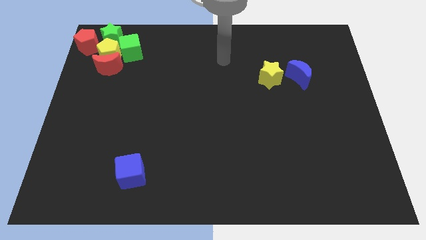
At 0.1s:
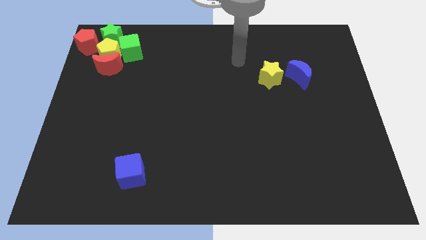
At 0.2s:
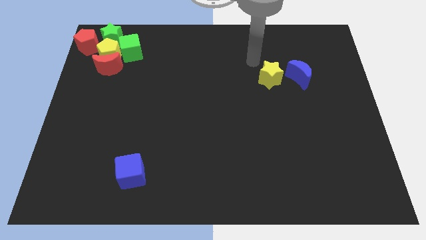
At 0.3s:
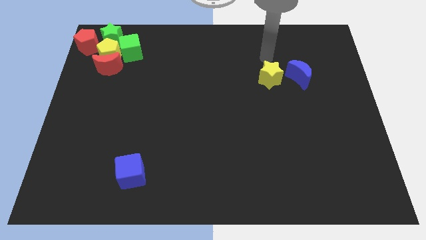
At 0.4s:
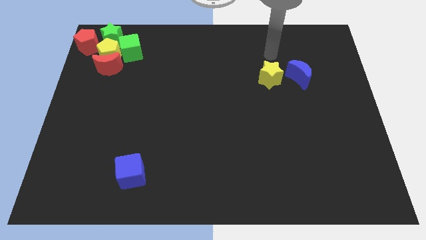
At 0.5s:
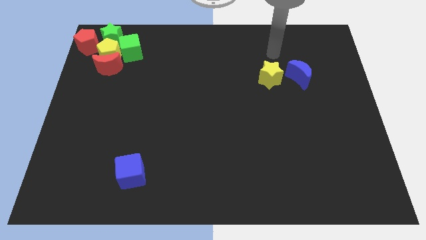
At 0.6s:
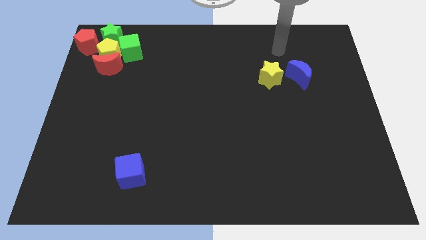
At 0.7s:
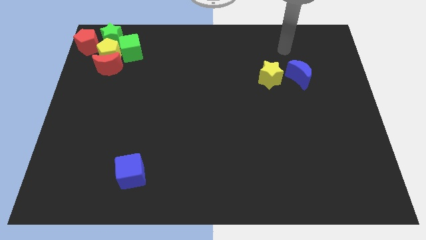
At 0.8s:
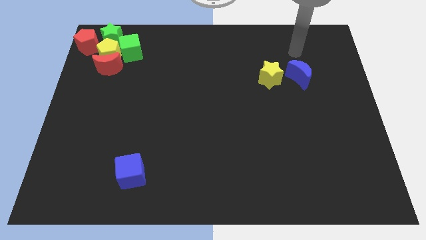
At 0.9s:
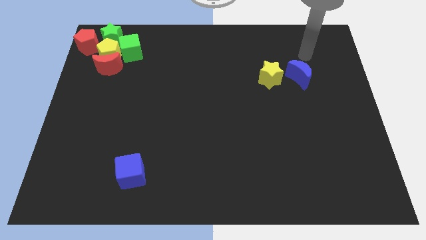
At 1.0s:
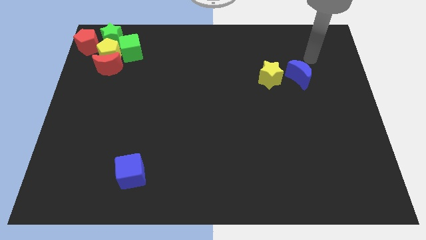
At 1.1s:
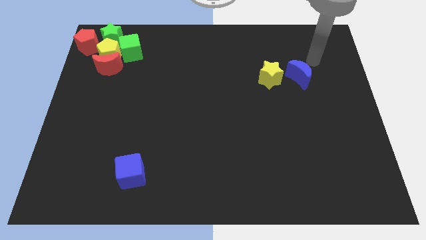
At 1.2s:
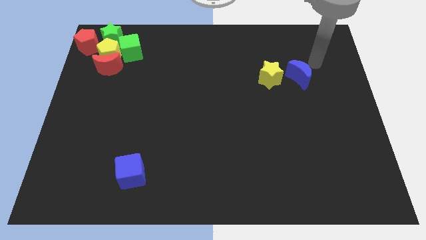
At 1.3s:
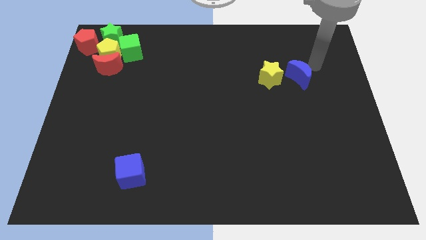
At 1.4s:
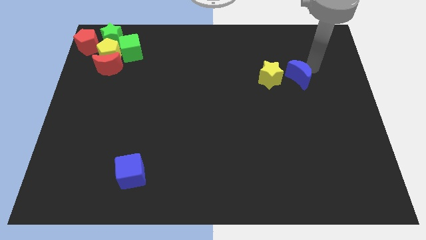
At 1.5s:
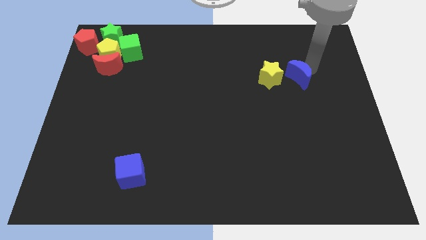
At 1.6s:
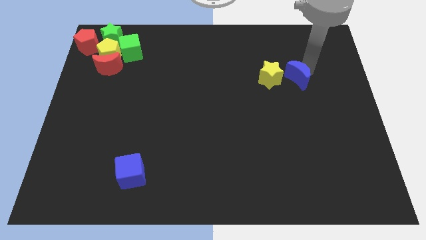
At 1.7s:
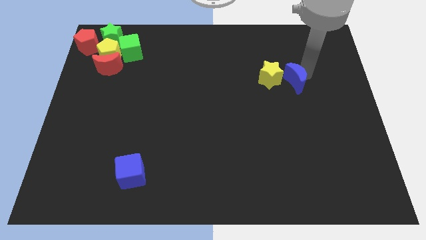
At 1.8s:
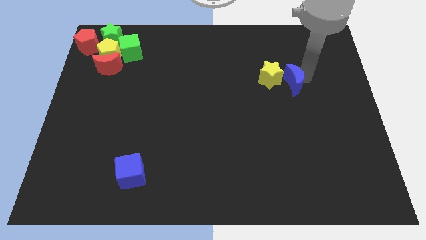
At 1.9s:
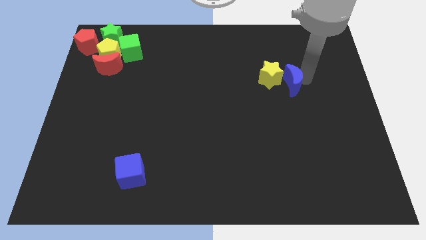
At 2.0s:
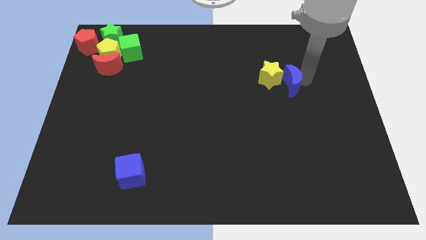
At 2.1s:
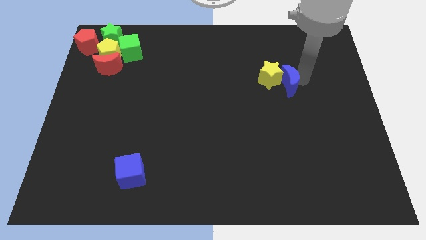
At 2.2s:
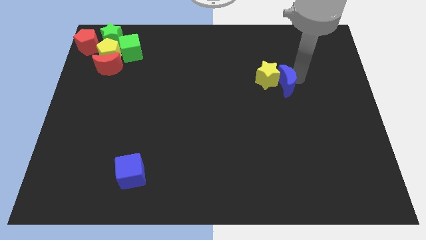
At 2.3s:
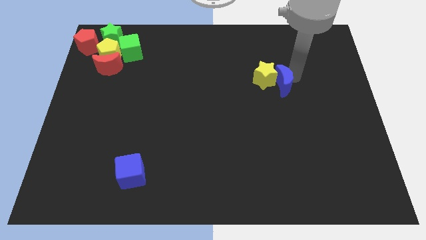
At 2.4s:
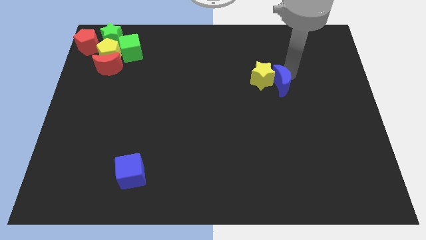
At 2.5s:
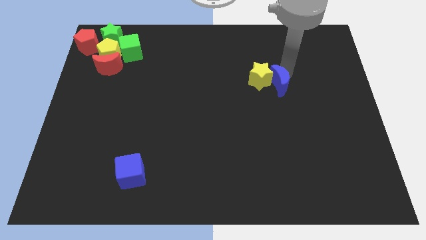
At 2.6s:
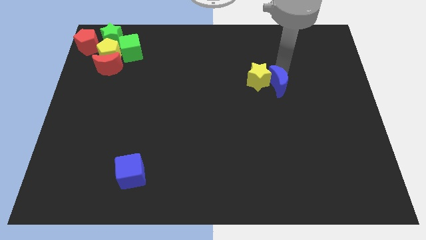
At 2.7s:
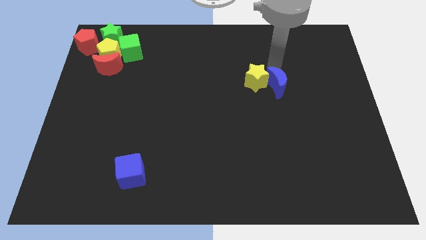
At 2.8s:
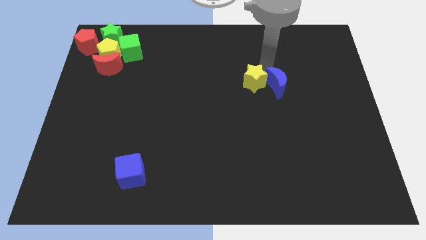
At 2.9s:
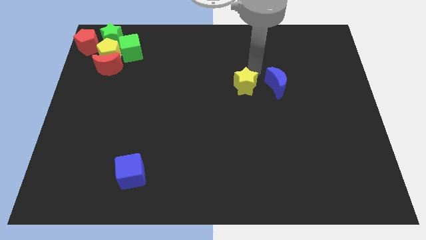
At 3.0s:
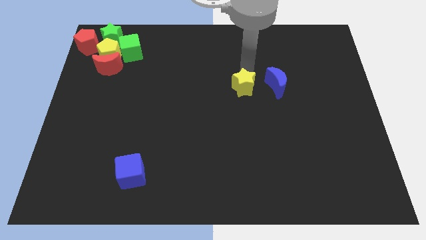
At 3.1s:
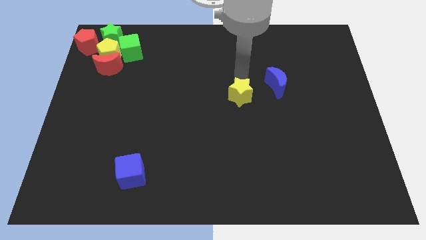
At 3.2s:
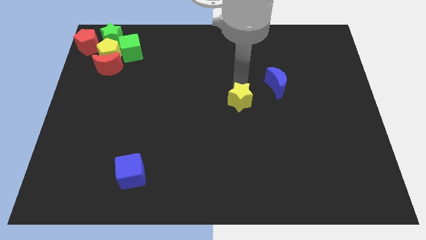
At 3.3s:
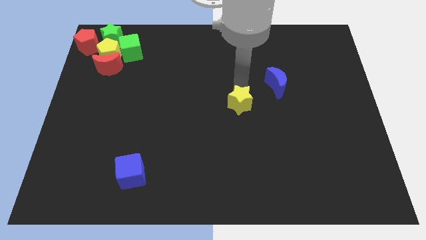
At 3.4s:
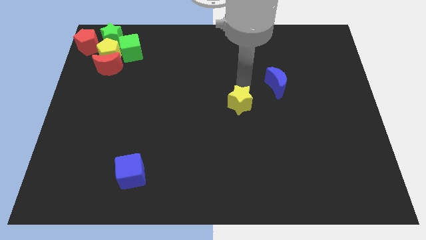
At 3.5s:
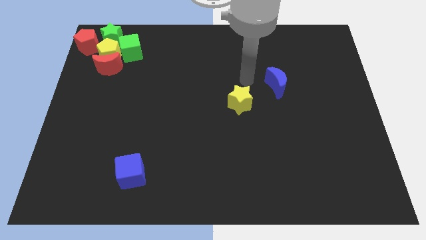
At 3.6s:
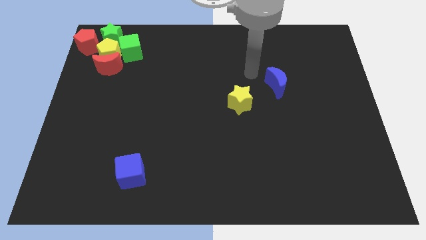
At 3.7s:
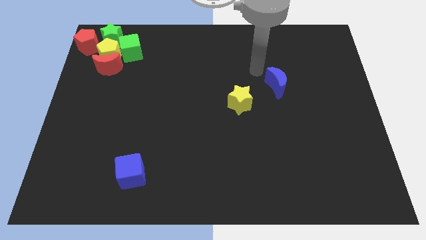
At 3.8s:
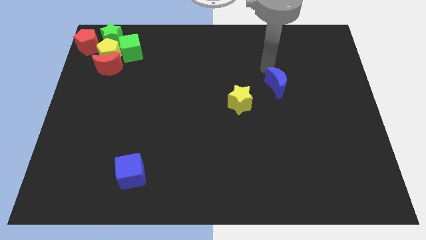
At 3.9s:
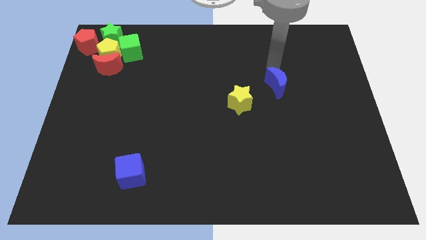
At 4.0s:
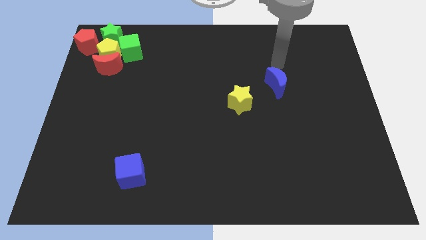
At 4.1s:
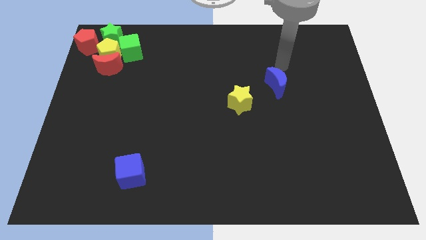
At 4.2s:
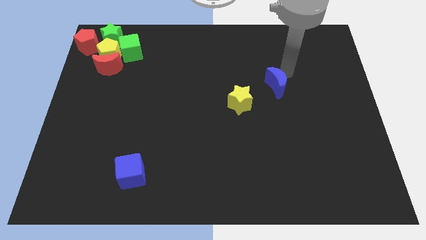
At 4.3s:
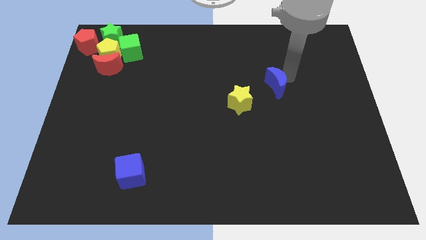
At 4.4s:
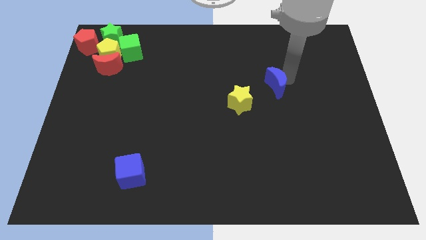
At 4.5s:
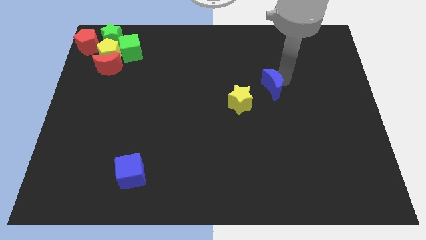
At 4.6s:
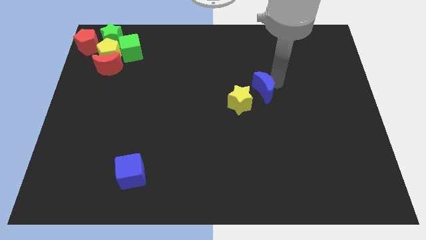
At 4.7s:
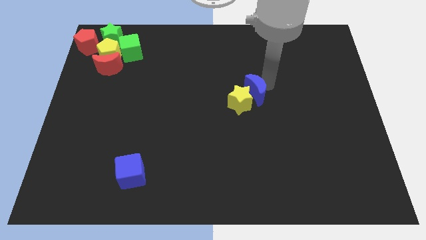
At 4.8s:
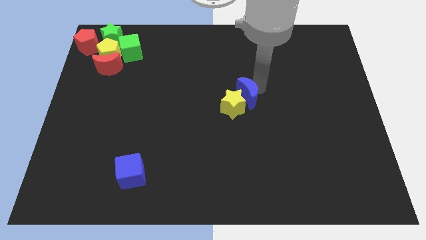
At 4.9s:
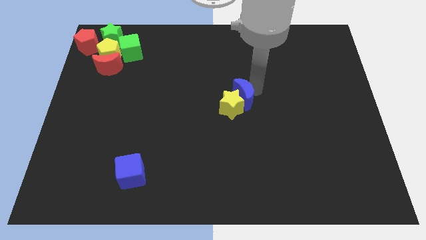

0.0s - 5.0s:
move the blue crescent into yellow star

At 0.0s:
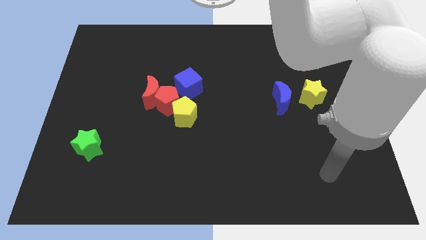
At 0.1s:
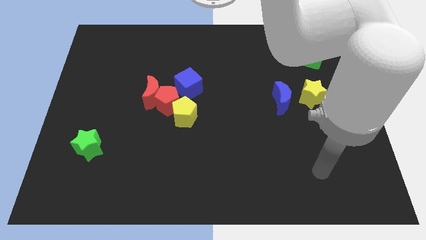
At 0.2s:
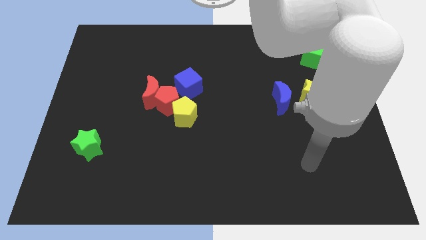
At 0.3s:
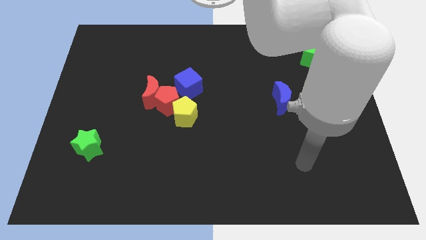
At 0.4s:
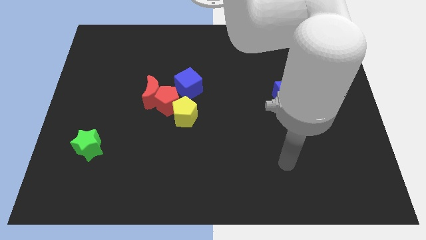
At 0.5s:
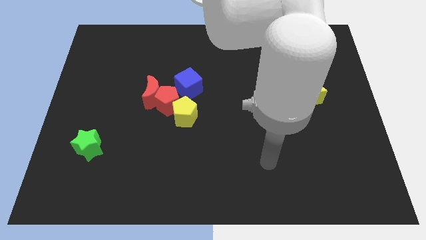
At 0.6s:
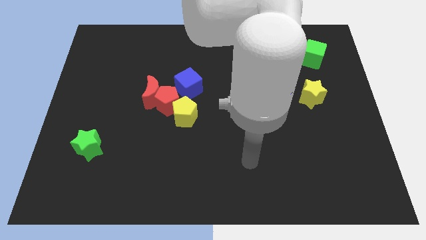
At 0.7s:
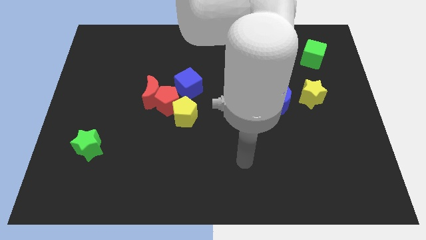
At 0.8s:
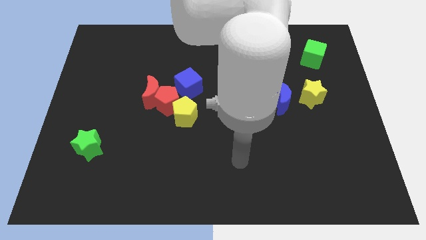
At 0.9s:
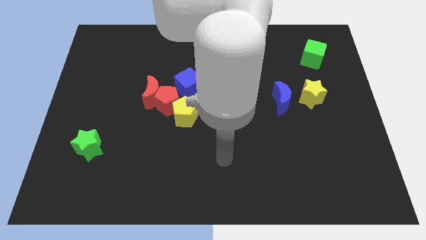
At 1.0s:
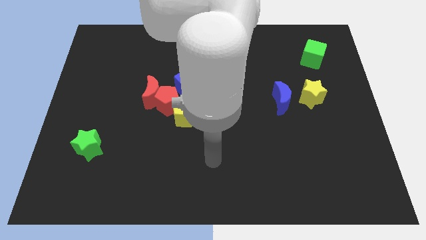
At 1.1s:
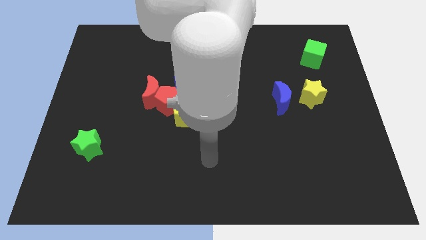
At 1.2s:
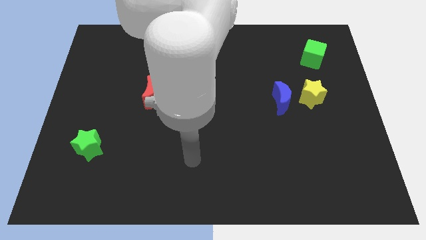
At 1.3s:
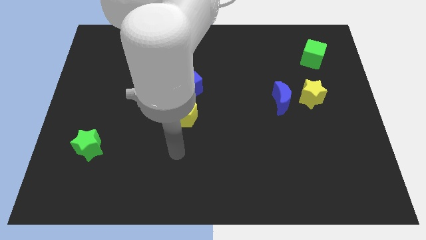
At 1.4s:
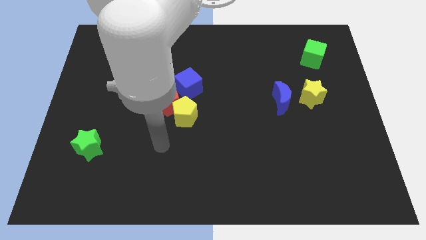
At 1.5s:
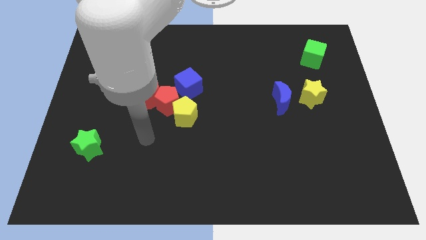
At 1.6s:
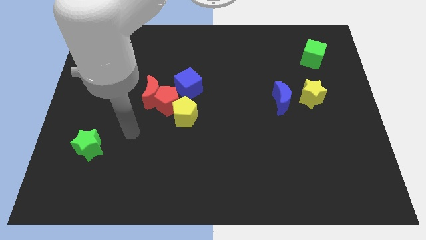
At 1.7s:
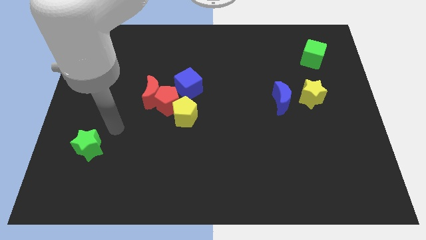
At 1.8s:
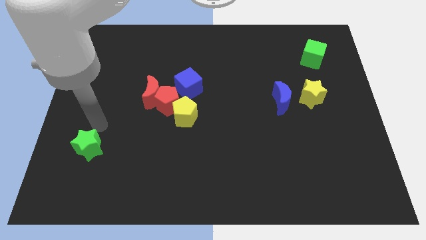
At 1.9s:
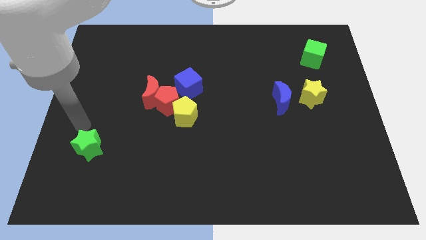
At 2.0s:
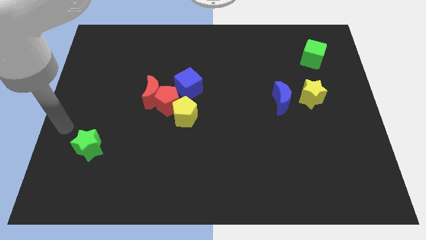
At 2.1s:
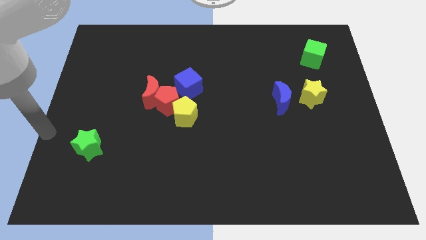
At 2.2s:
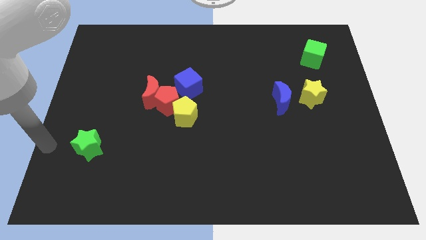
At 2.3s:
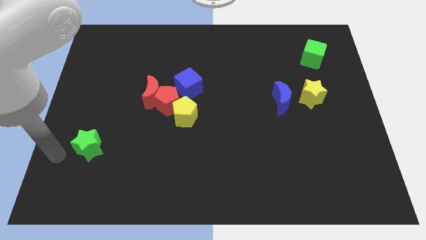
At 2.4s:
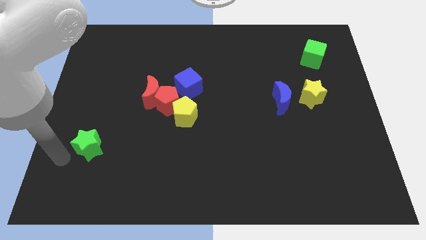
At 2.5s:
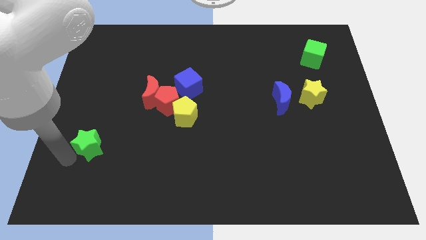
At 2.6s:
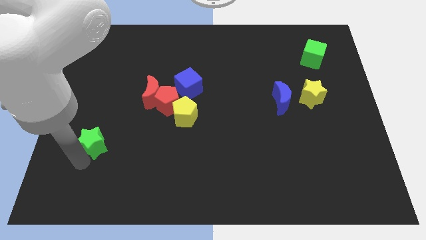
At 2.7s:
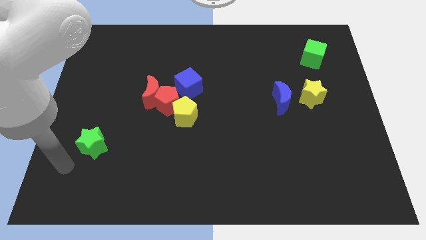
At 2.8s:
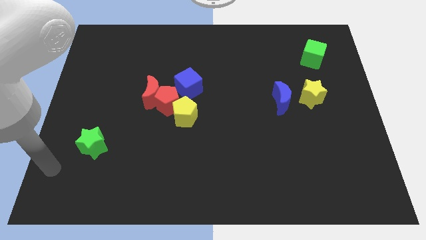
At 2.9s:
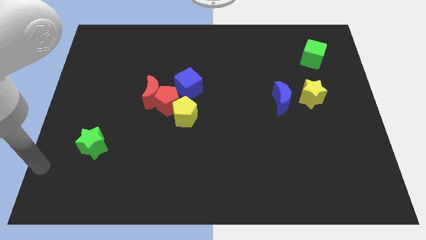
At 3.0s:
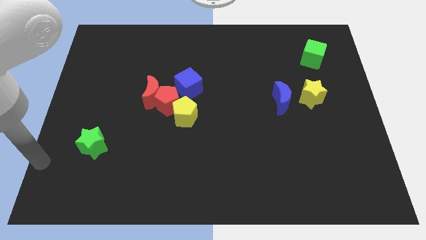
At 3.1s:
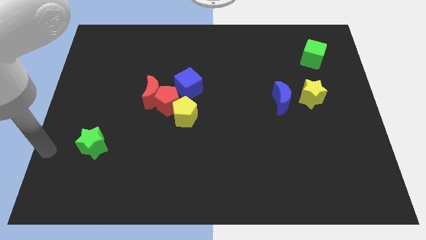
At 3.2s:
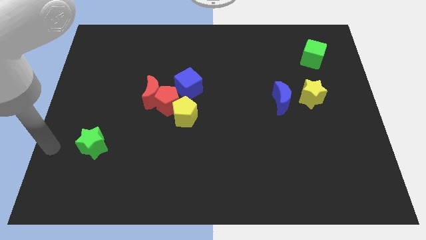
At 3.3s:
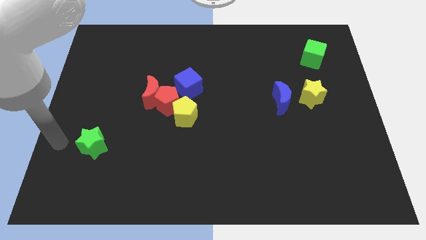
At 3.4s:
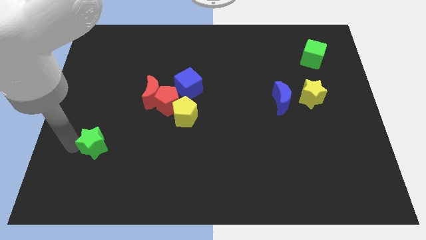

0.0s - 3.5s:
move your arm towards the green star

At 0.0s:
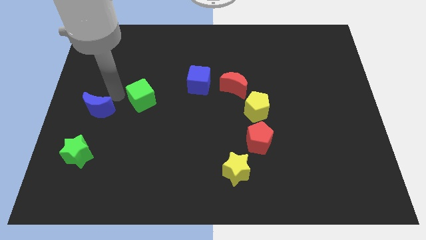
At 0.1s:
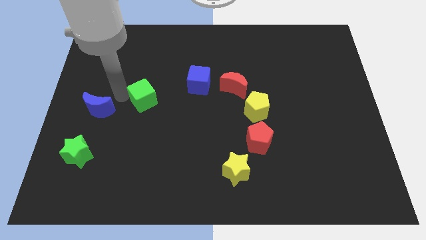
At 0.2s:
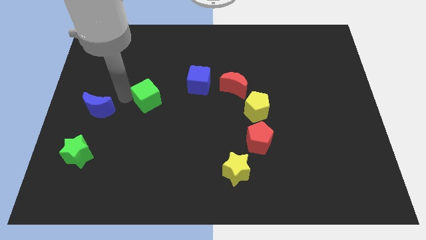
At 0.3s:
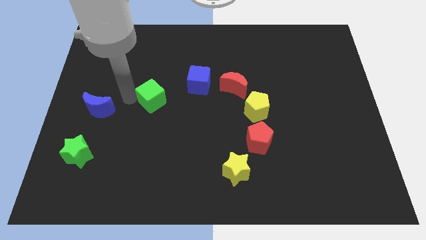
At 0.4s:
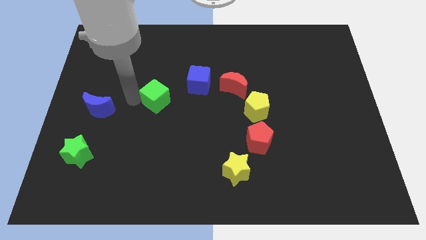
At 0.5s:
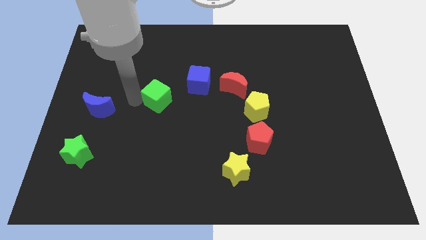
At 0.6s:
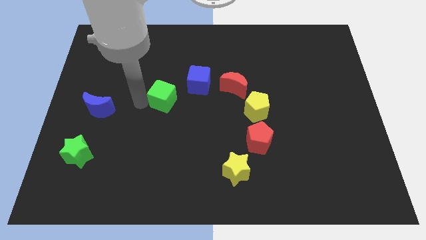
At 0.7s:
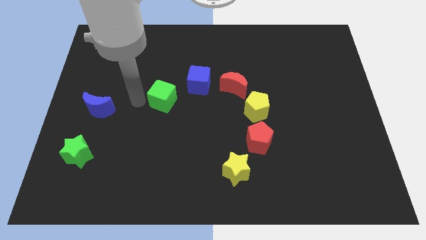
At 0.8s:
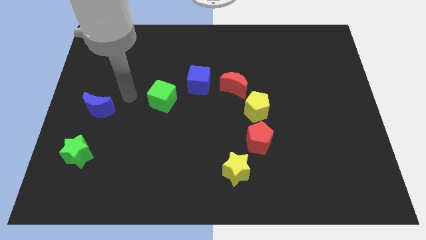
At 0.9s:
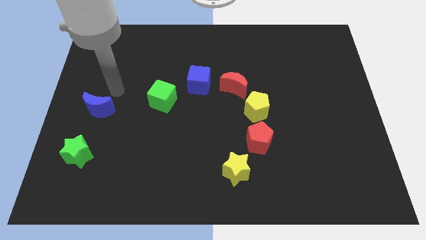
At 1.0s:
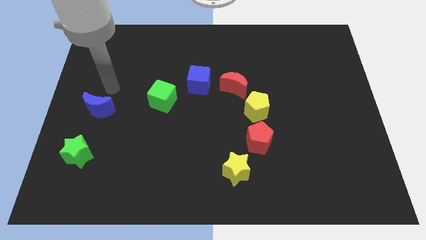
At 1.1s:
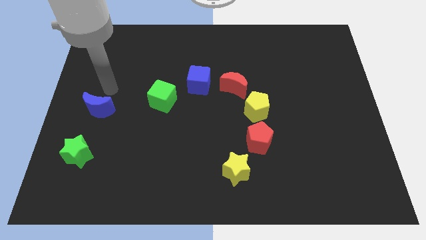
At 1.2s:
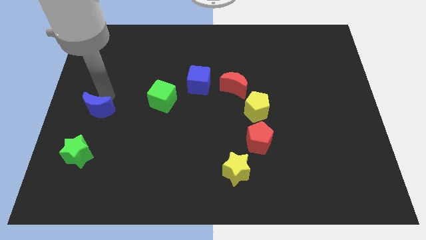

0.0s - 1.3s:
move the green cube to the bottom left side of the blue cube
